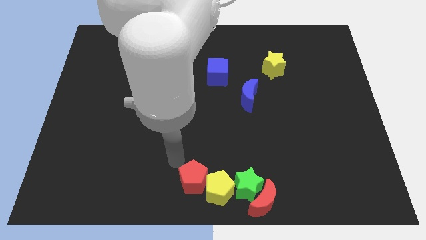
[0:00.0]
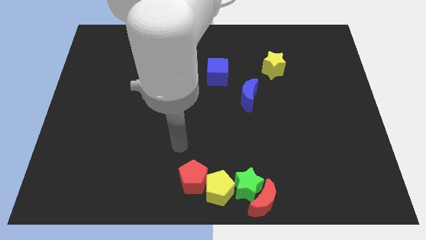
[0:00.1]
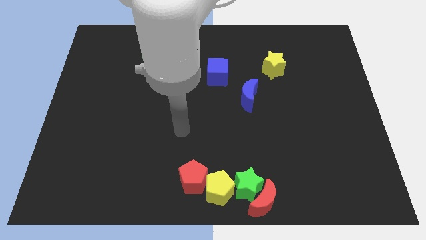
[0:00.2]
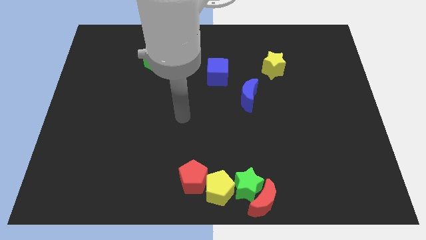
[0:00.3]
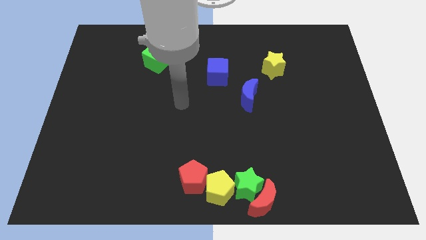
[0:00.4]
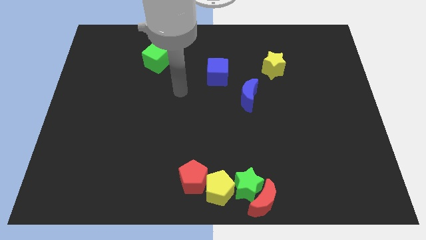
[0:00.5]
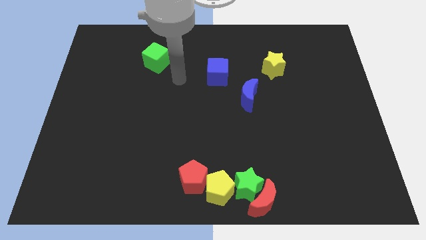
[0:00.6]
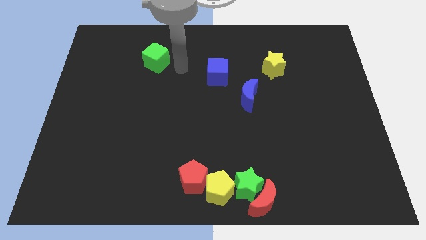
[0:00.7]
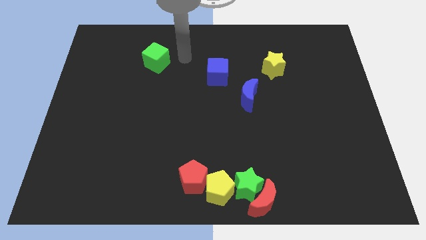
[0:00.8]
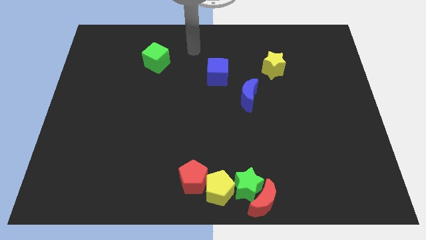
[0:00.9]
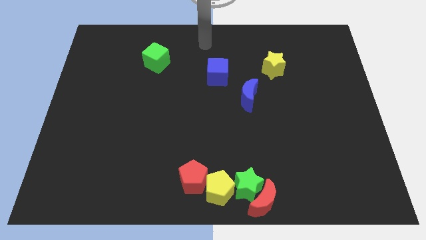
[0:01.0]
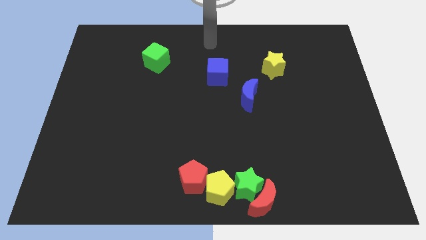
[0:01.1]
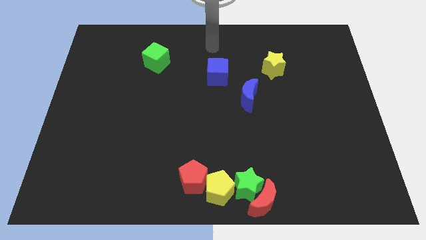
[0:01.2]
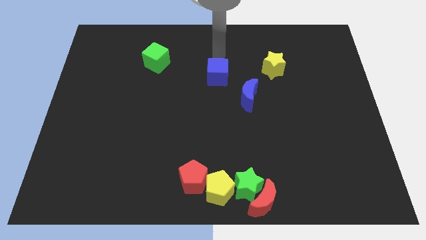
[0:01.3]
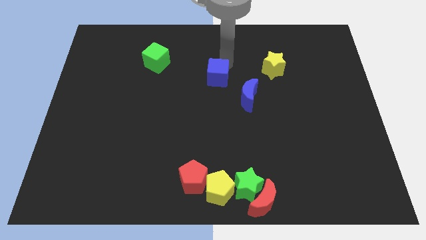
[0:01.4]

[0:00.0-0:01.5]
move your arm to the top side of the blue cube

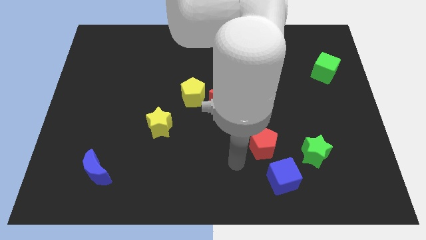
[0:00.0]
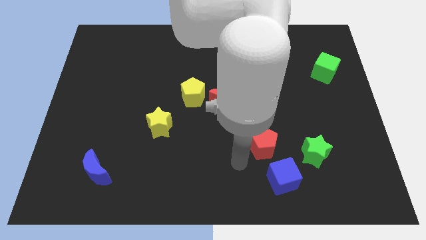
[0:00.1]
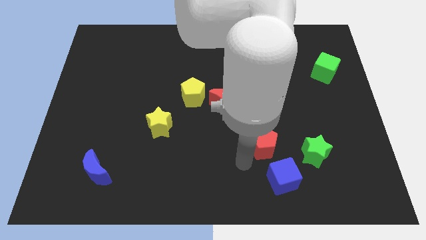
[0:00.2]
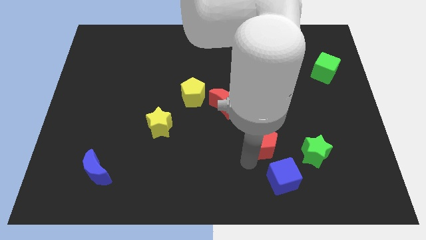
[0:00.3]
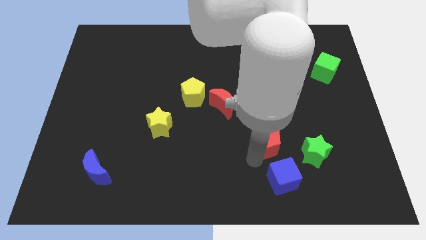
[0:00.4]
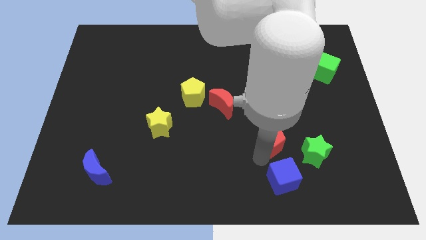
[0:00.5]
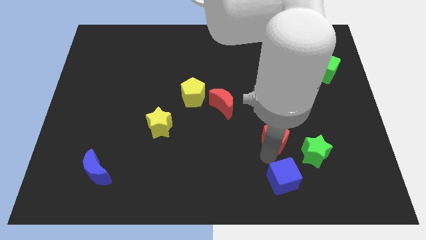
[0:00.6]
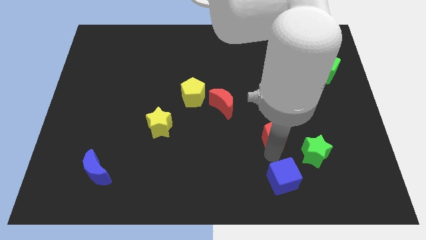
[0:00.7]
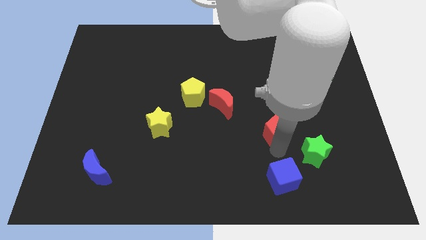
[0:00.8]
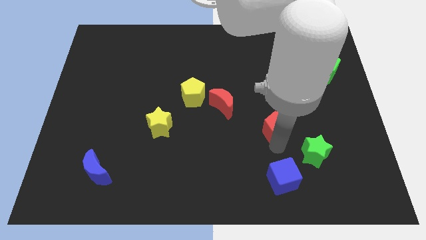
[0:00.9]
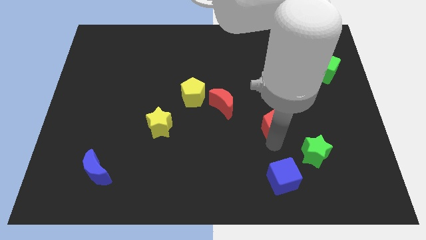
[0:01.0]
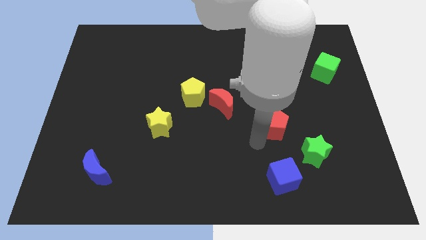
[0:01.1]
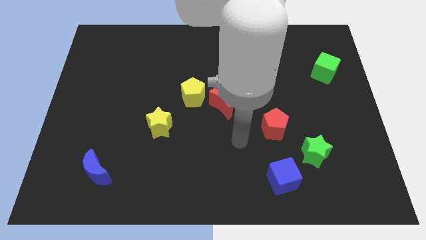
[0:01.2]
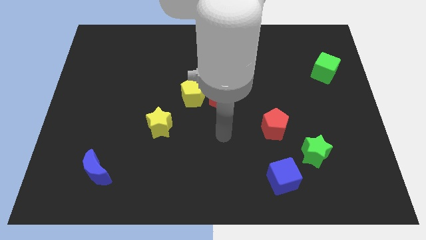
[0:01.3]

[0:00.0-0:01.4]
place the red pentagon diagonally in between the red crescent and green star

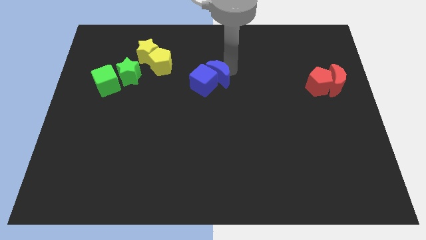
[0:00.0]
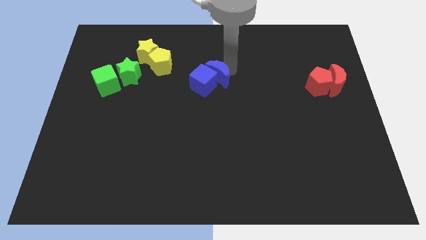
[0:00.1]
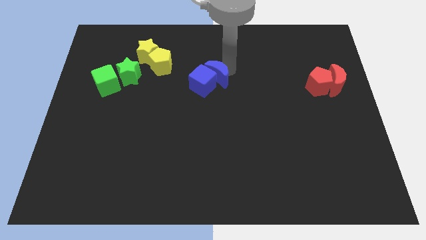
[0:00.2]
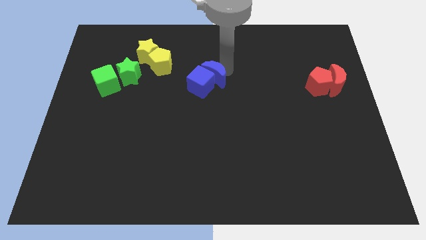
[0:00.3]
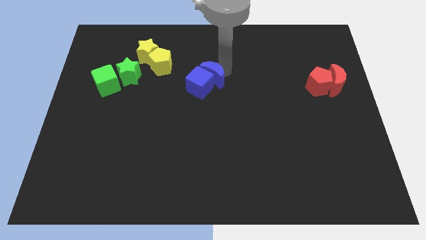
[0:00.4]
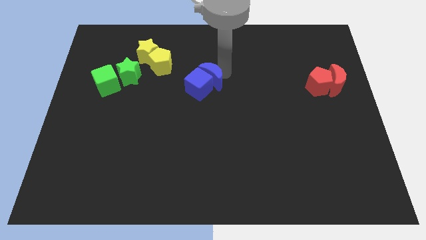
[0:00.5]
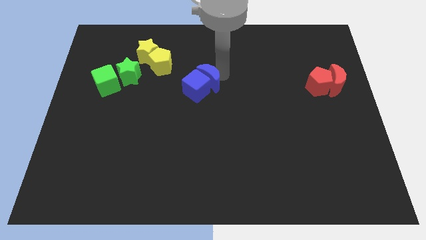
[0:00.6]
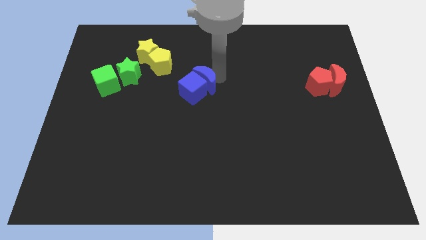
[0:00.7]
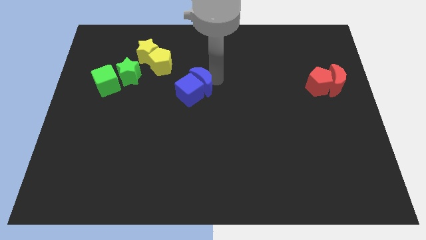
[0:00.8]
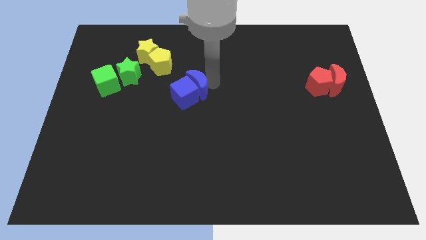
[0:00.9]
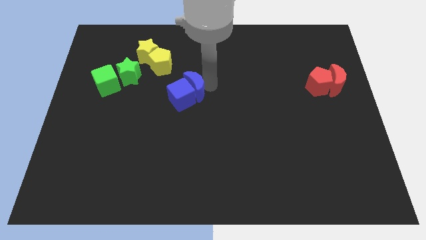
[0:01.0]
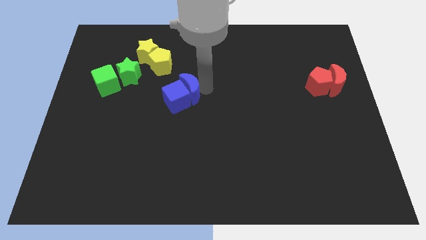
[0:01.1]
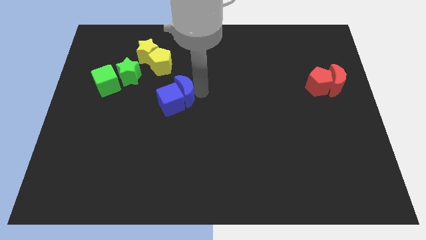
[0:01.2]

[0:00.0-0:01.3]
move the blue crescent and blue cube to the bottom of the yellow blocks

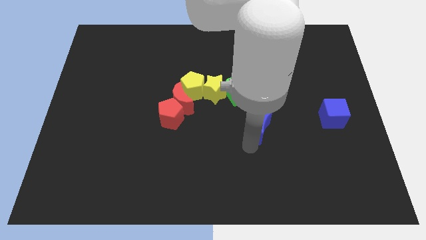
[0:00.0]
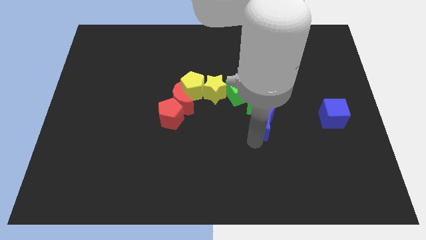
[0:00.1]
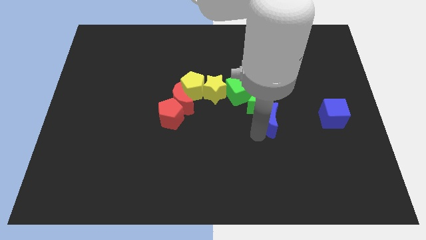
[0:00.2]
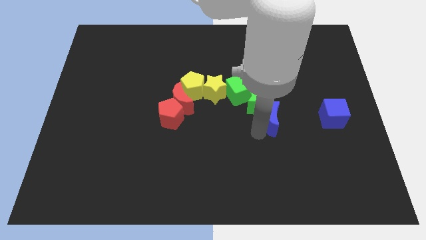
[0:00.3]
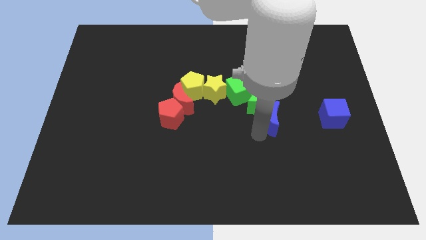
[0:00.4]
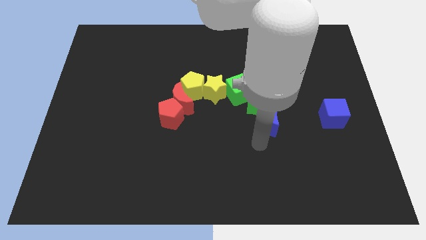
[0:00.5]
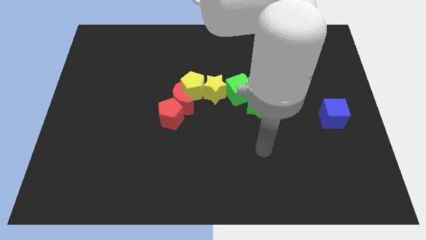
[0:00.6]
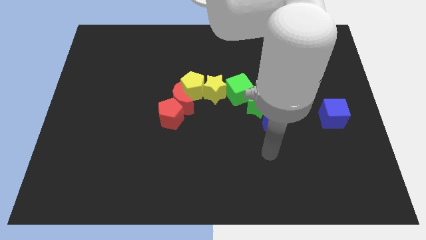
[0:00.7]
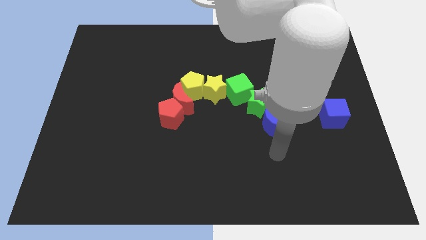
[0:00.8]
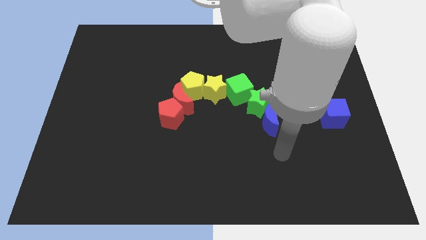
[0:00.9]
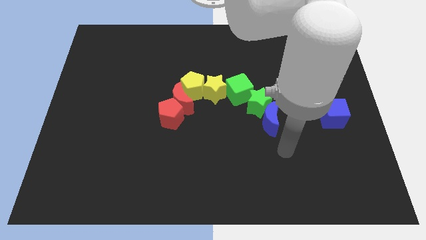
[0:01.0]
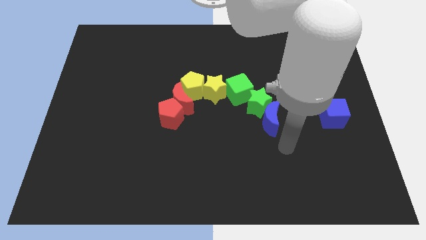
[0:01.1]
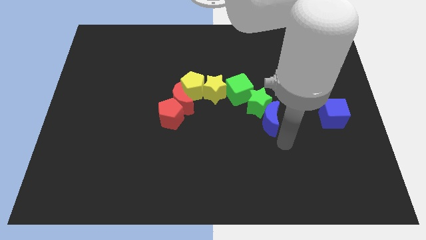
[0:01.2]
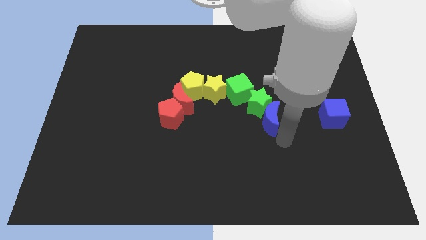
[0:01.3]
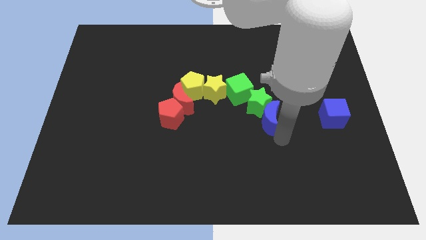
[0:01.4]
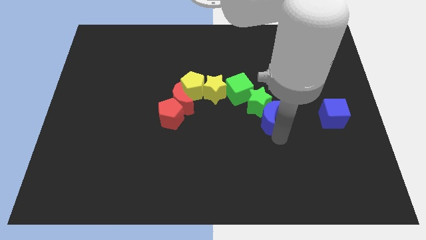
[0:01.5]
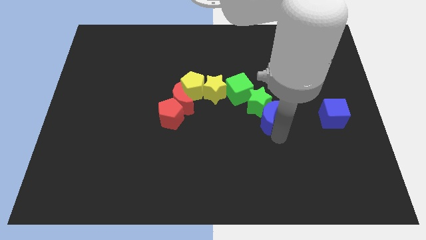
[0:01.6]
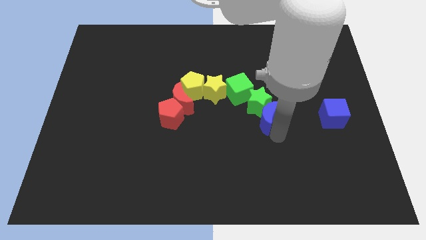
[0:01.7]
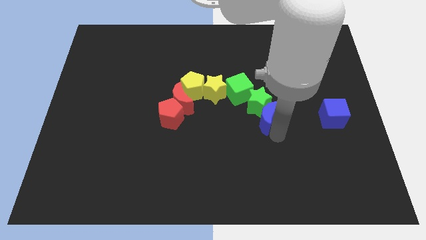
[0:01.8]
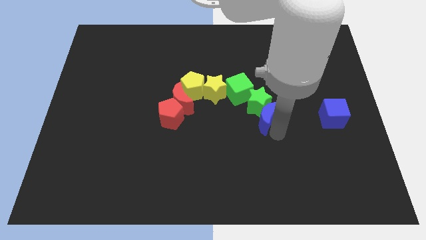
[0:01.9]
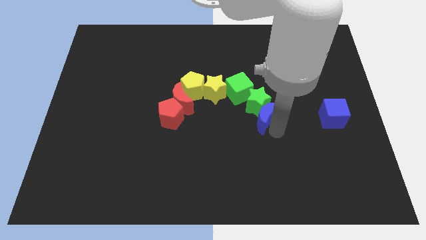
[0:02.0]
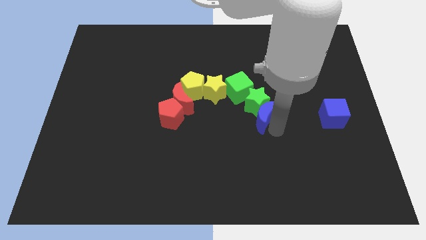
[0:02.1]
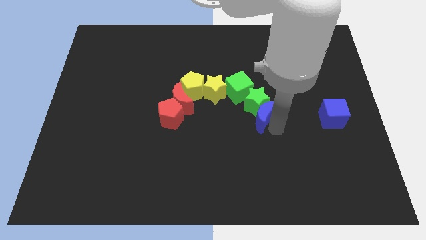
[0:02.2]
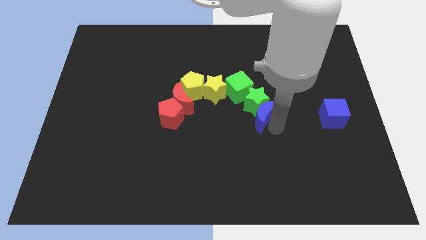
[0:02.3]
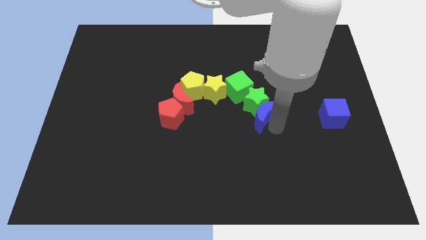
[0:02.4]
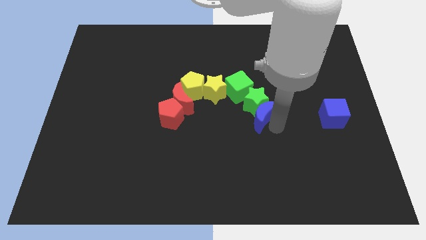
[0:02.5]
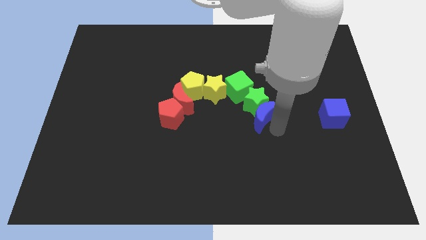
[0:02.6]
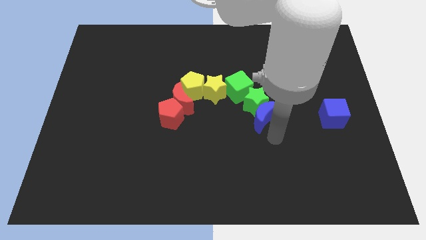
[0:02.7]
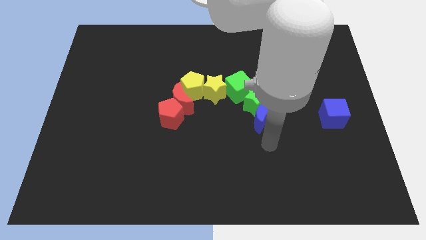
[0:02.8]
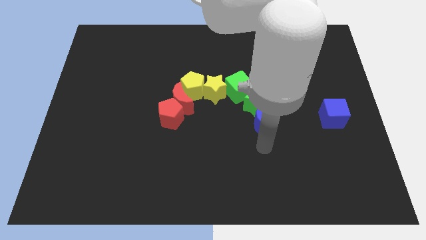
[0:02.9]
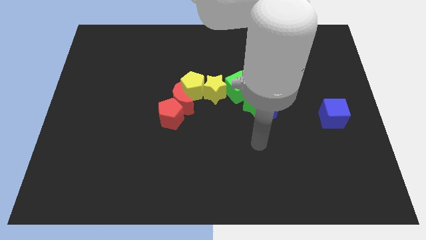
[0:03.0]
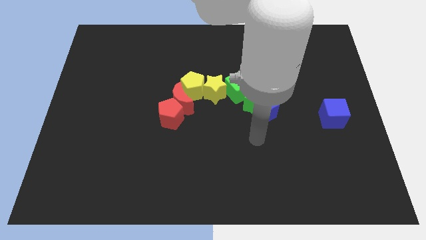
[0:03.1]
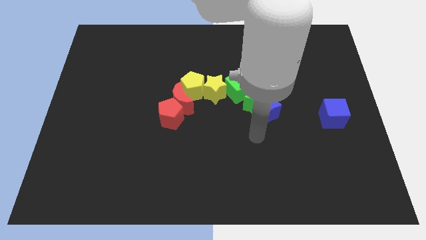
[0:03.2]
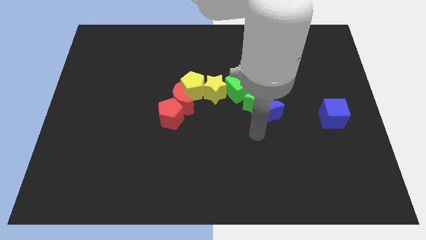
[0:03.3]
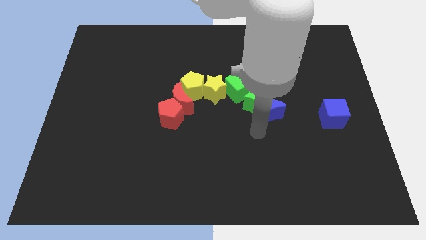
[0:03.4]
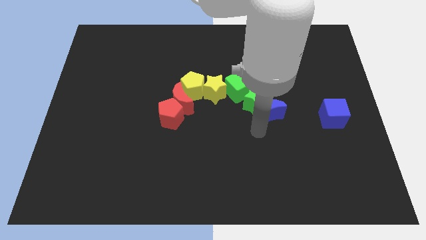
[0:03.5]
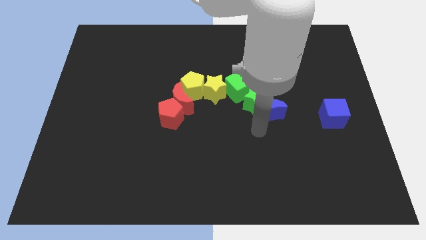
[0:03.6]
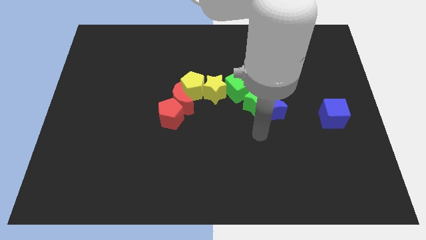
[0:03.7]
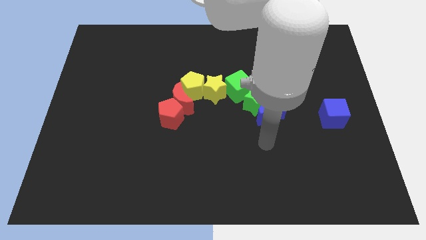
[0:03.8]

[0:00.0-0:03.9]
push the blue crescent below to the green star

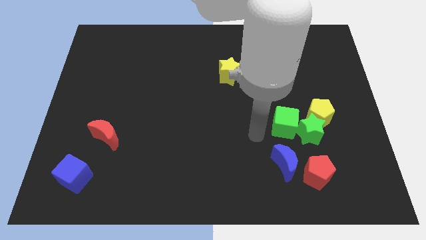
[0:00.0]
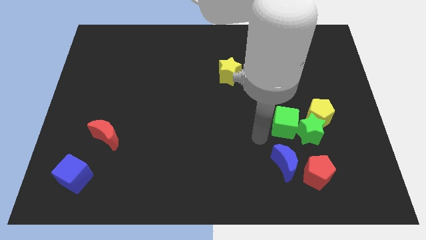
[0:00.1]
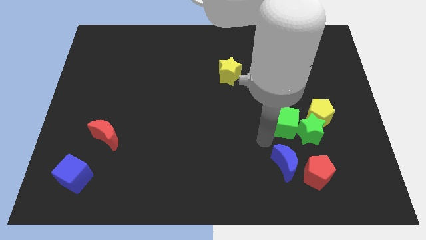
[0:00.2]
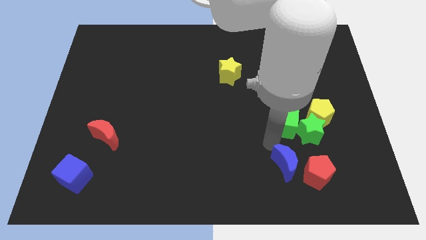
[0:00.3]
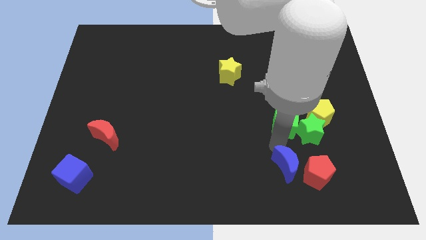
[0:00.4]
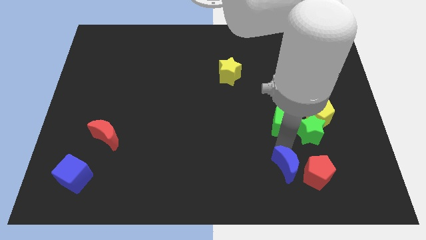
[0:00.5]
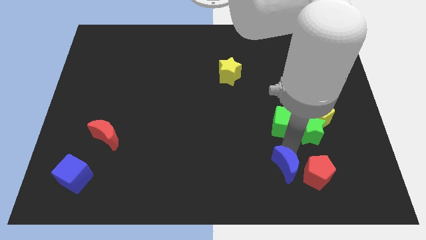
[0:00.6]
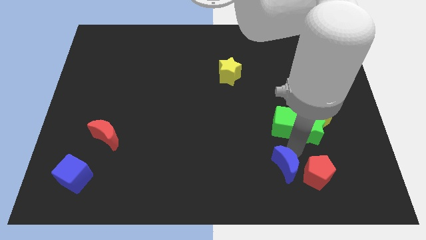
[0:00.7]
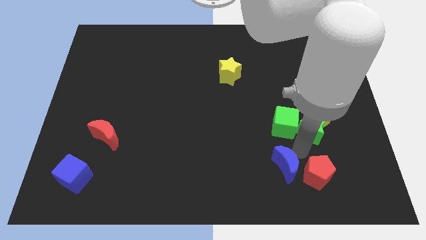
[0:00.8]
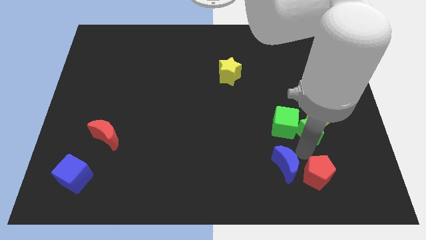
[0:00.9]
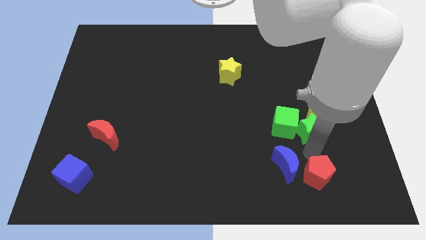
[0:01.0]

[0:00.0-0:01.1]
place your hand in between the green star and red pentagon
